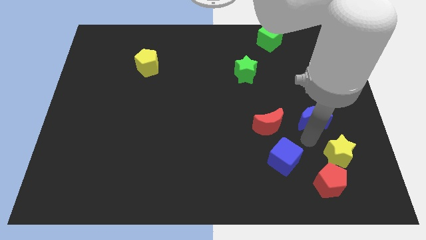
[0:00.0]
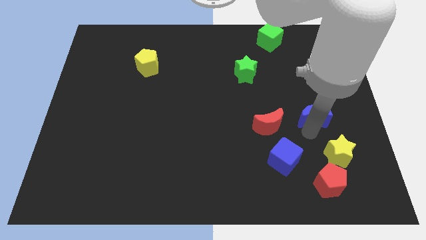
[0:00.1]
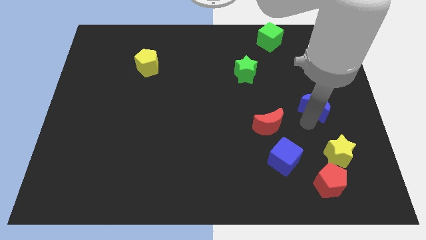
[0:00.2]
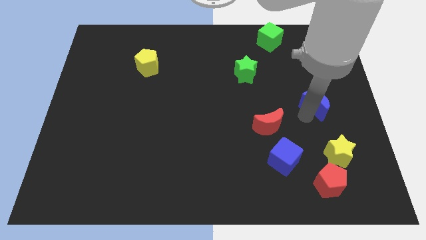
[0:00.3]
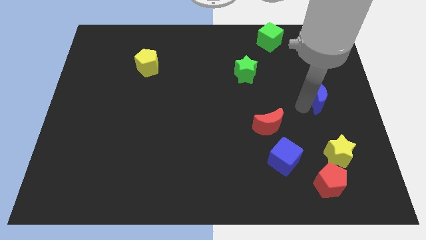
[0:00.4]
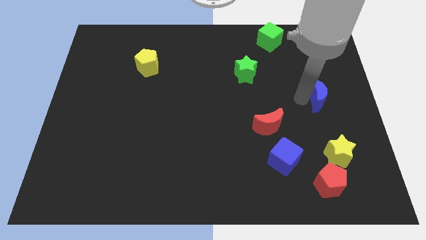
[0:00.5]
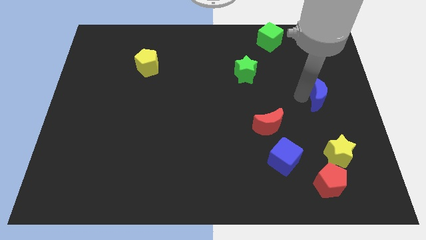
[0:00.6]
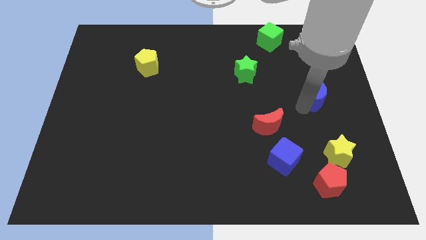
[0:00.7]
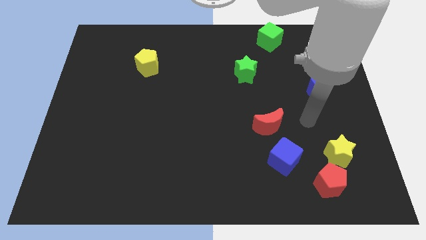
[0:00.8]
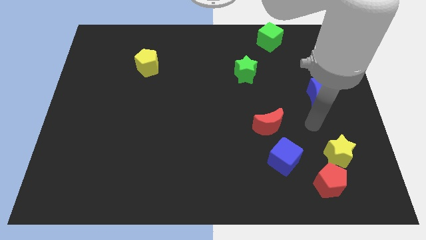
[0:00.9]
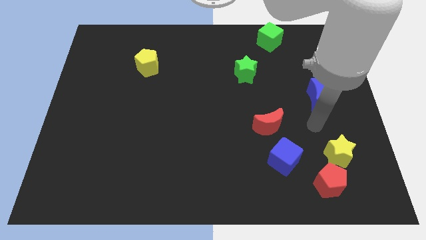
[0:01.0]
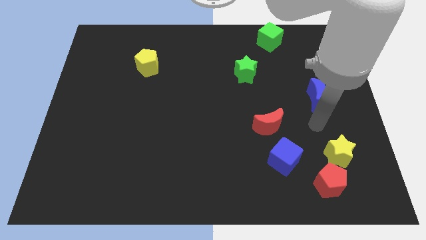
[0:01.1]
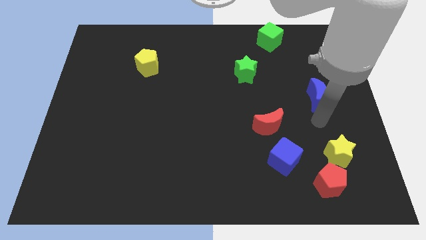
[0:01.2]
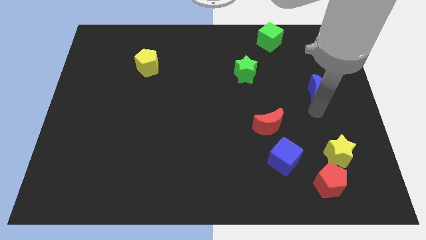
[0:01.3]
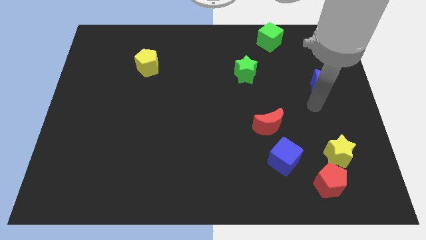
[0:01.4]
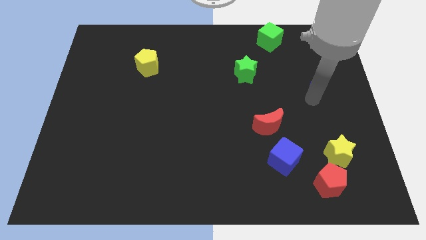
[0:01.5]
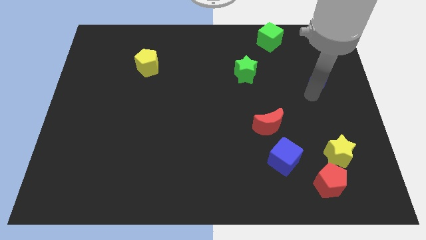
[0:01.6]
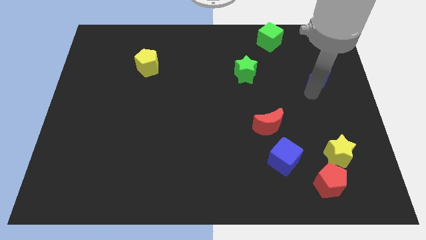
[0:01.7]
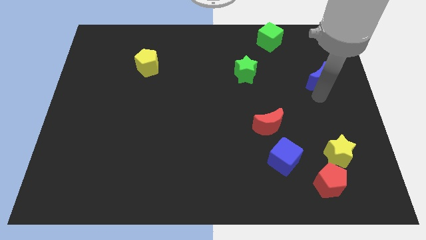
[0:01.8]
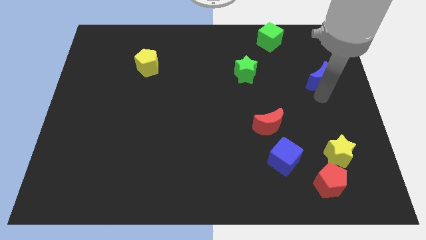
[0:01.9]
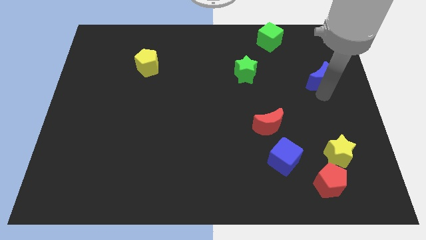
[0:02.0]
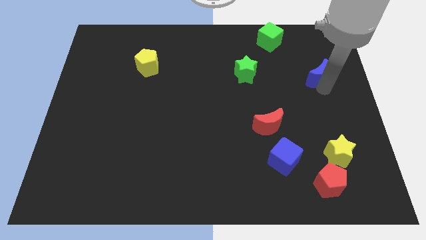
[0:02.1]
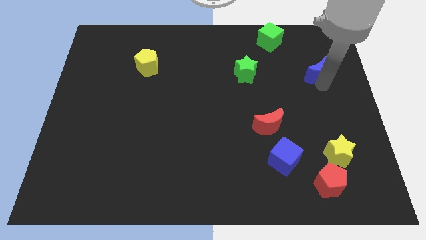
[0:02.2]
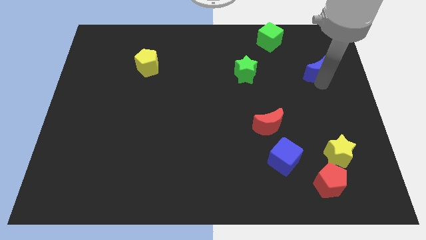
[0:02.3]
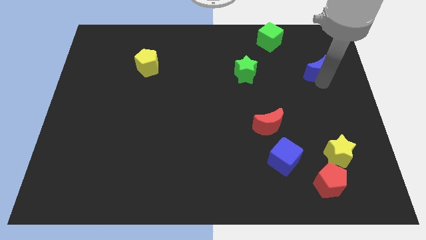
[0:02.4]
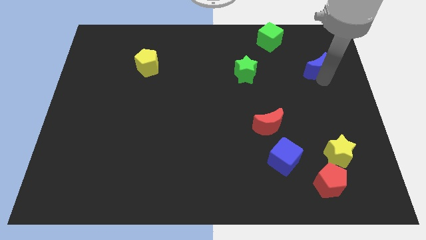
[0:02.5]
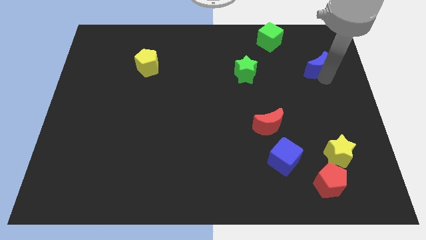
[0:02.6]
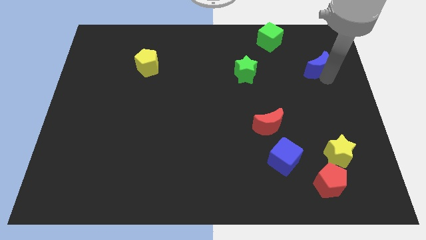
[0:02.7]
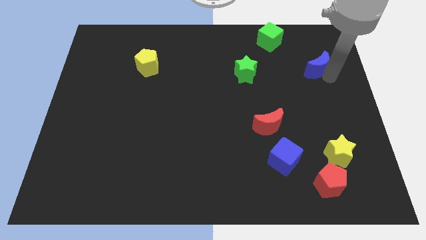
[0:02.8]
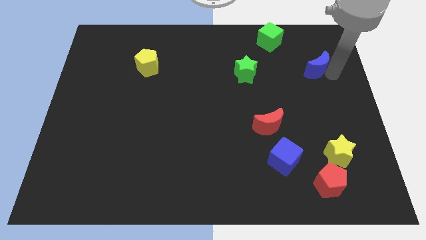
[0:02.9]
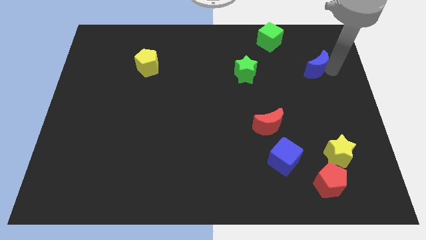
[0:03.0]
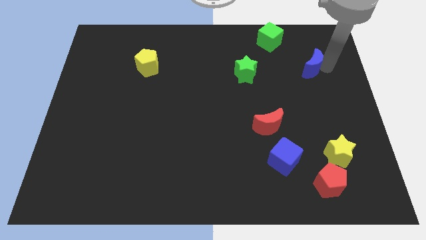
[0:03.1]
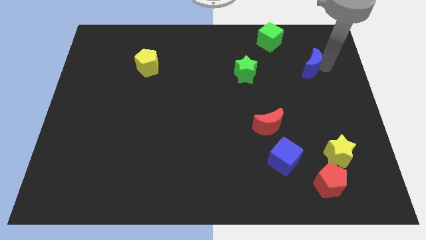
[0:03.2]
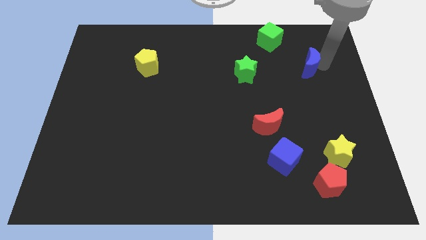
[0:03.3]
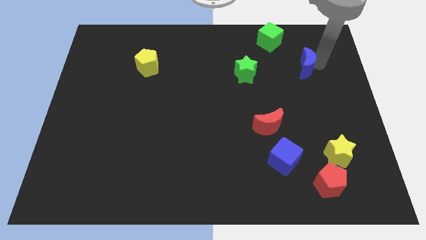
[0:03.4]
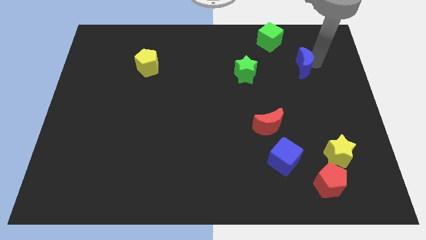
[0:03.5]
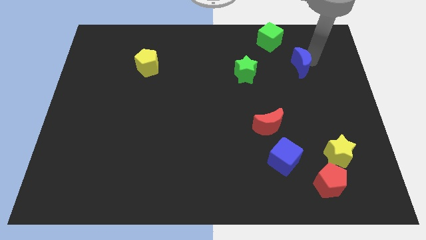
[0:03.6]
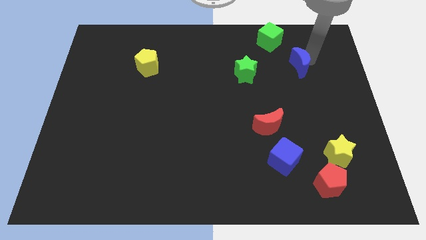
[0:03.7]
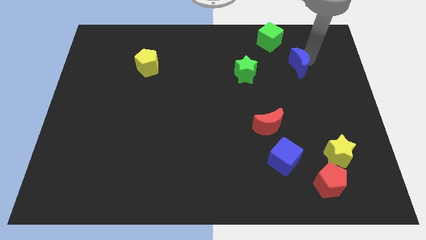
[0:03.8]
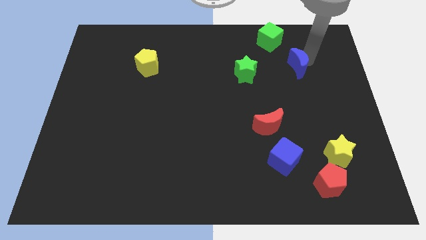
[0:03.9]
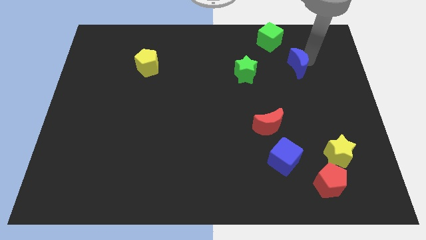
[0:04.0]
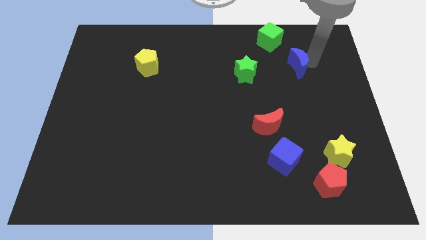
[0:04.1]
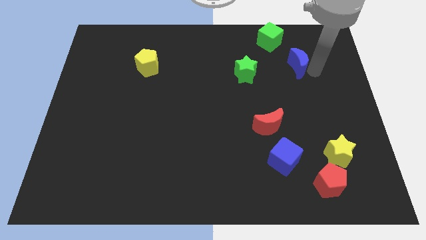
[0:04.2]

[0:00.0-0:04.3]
move the blue crescent parallel to the green star

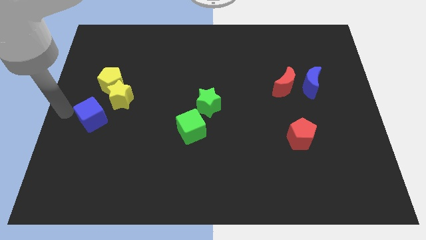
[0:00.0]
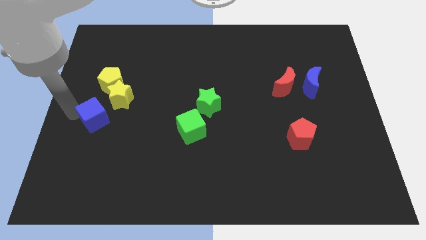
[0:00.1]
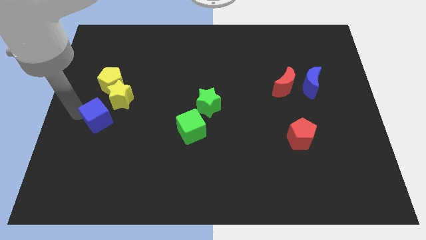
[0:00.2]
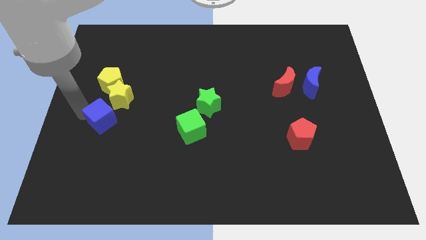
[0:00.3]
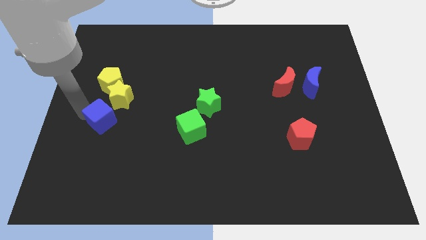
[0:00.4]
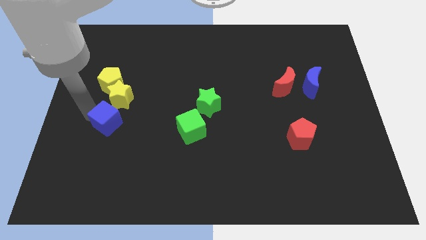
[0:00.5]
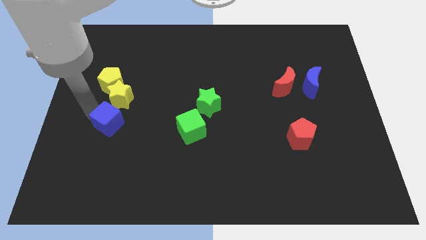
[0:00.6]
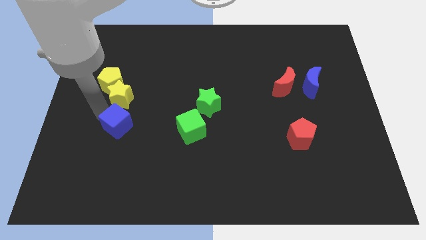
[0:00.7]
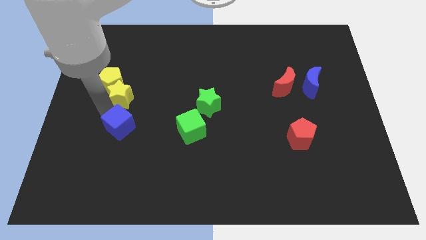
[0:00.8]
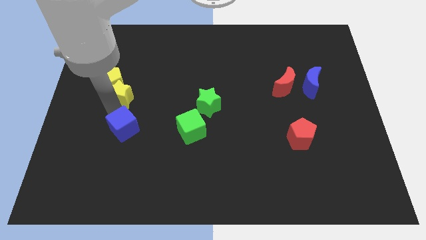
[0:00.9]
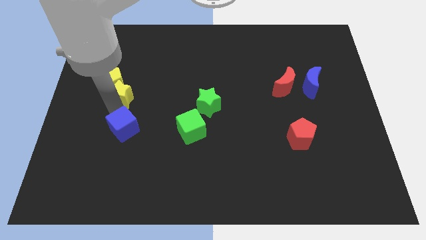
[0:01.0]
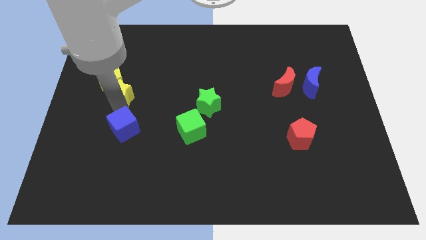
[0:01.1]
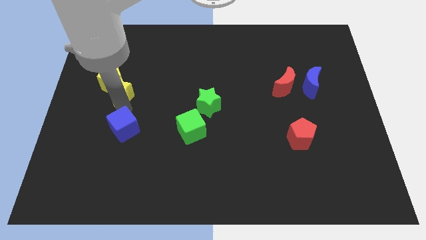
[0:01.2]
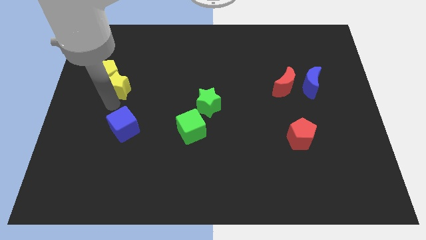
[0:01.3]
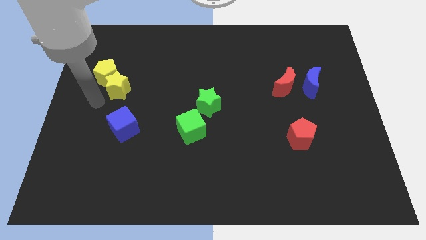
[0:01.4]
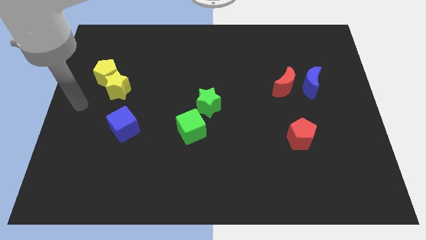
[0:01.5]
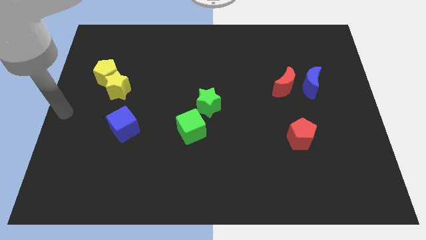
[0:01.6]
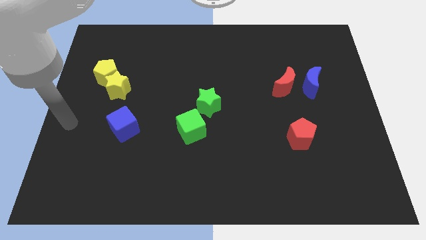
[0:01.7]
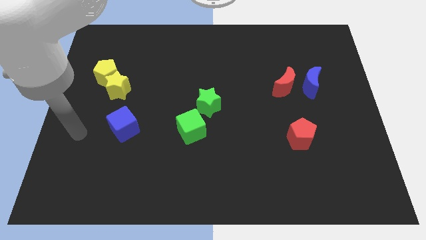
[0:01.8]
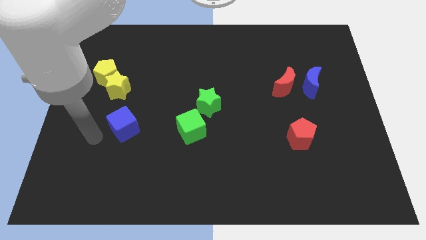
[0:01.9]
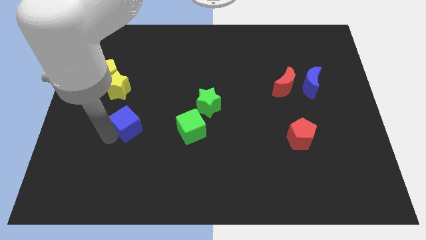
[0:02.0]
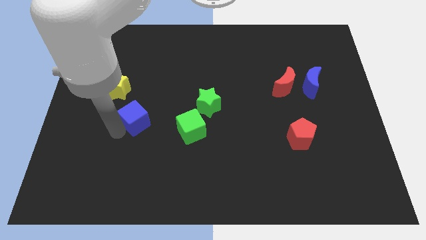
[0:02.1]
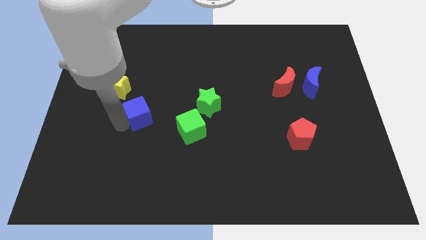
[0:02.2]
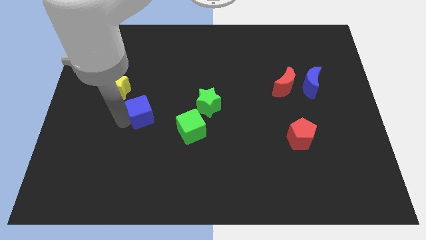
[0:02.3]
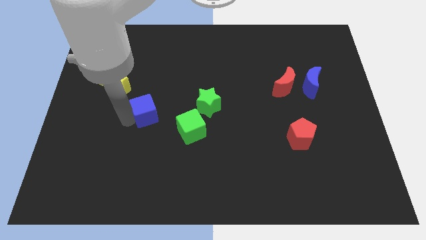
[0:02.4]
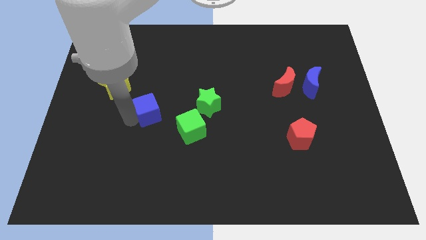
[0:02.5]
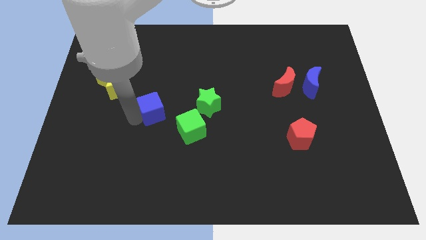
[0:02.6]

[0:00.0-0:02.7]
move the blue cube slightly to the right

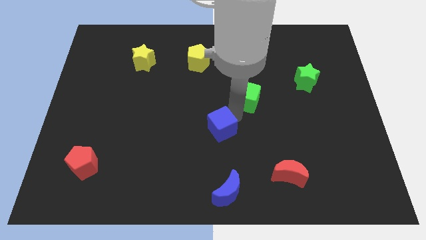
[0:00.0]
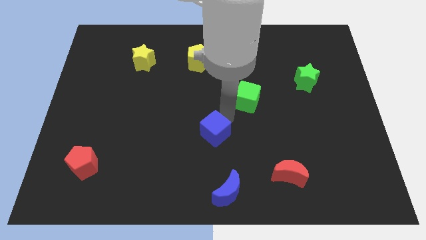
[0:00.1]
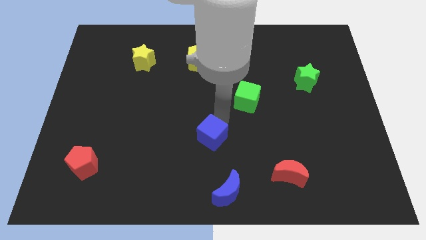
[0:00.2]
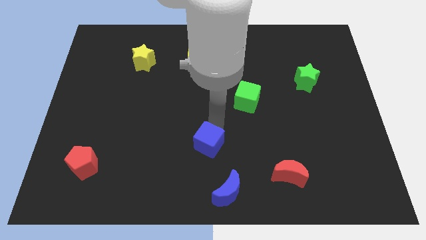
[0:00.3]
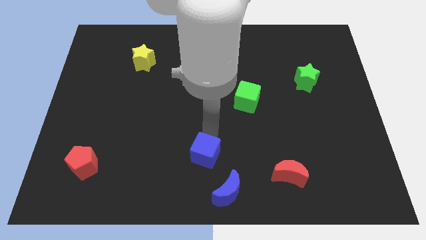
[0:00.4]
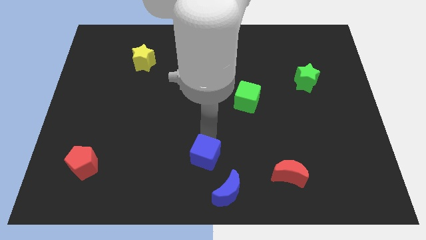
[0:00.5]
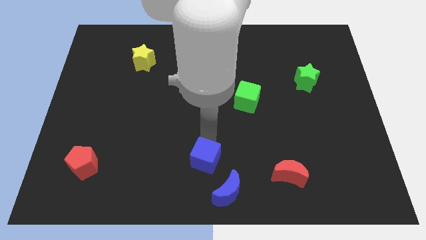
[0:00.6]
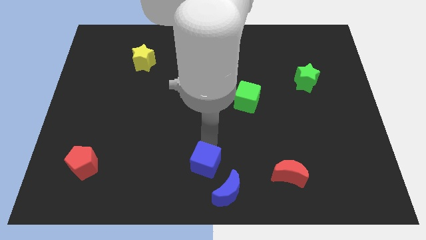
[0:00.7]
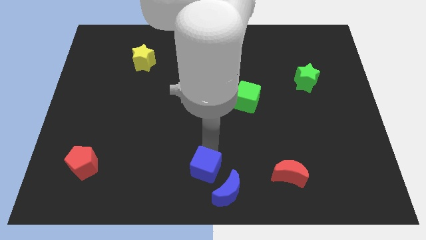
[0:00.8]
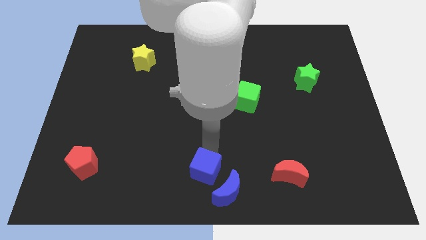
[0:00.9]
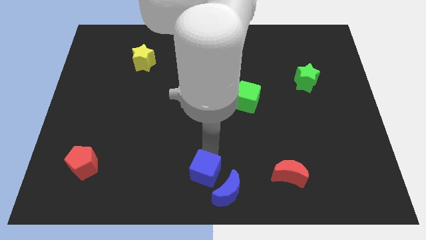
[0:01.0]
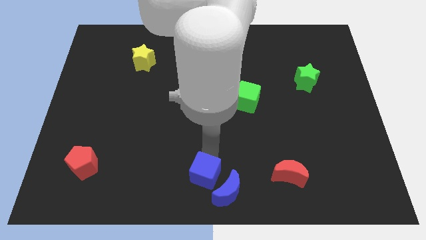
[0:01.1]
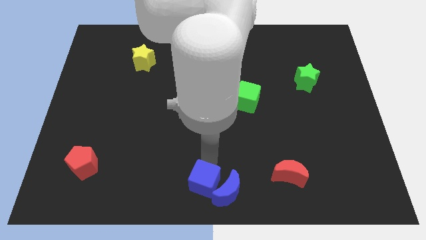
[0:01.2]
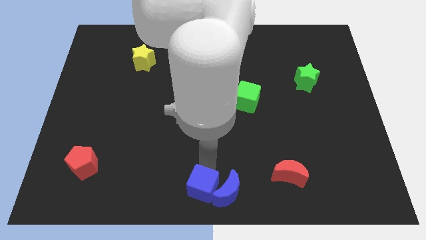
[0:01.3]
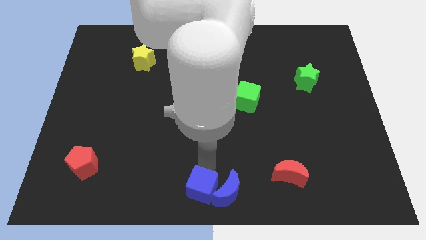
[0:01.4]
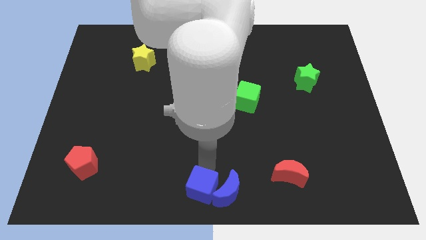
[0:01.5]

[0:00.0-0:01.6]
move the blue cube to the left of the blue moon
